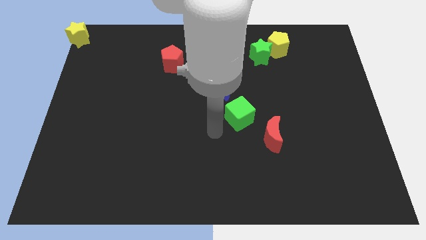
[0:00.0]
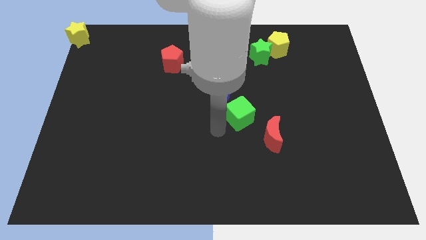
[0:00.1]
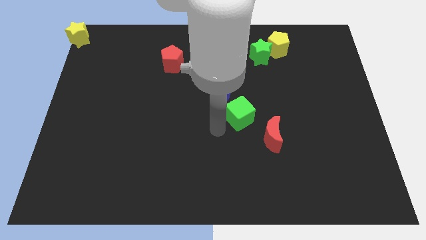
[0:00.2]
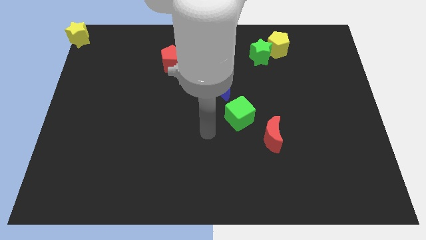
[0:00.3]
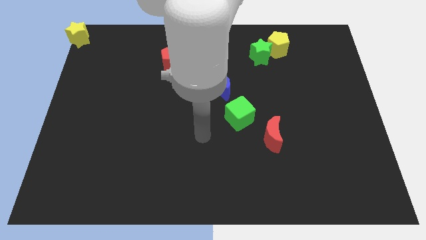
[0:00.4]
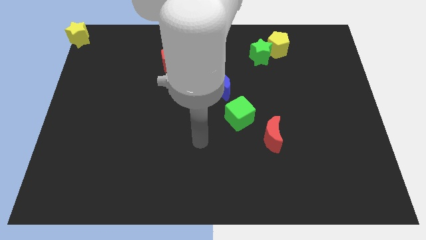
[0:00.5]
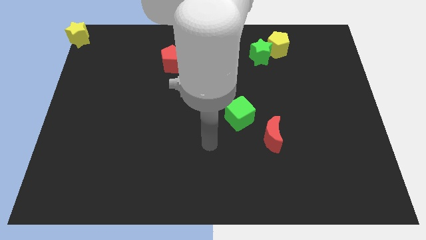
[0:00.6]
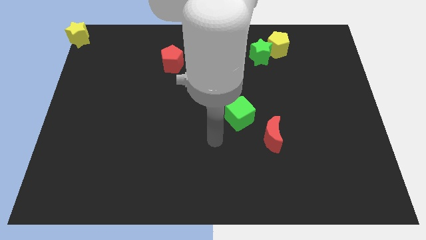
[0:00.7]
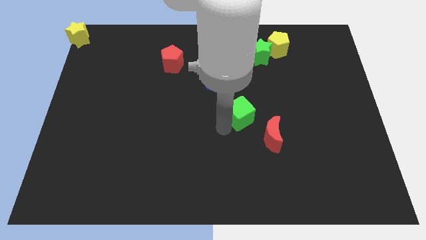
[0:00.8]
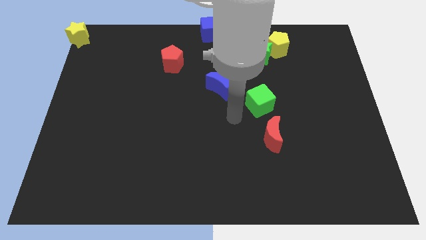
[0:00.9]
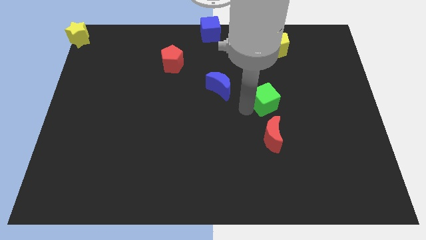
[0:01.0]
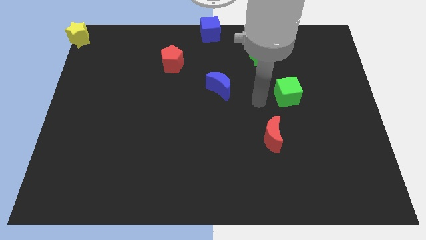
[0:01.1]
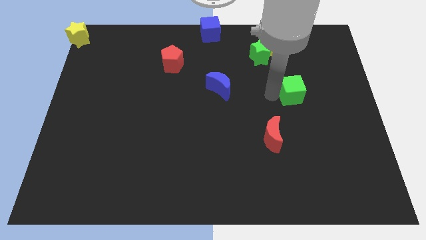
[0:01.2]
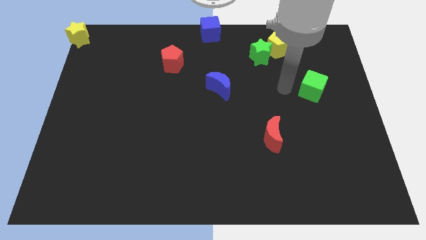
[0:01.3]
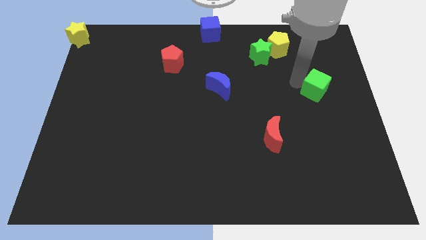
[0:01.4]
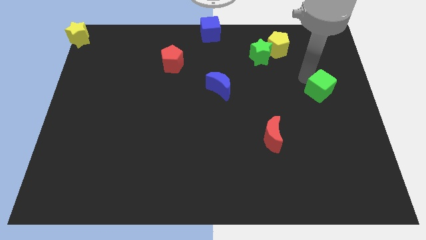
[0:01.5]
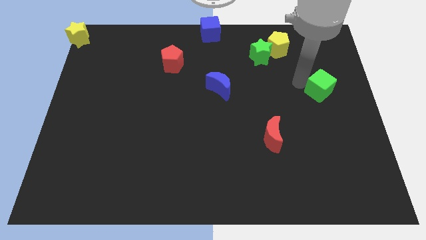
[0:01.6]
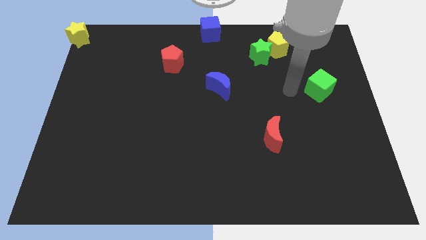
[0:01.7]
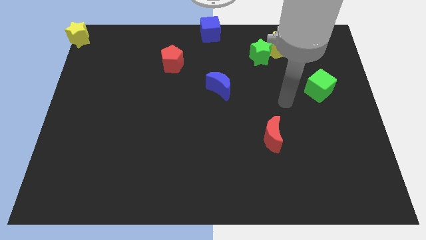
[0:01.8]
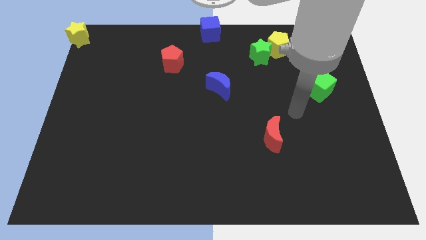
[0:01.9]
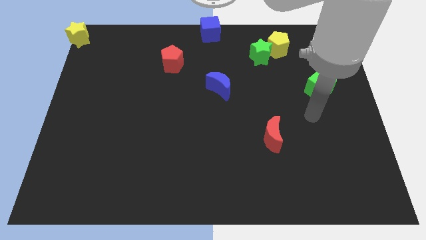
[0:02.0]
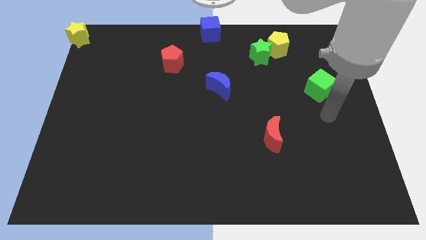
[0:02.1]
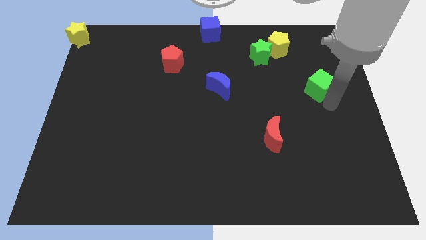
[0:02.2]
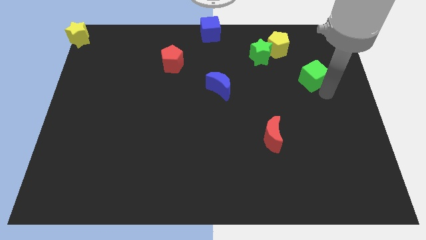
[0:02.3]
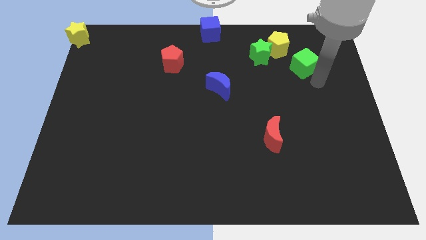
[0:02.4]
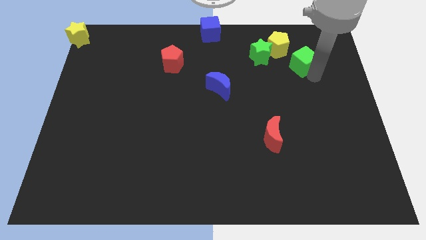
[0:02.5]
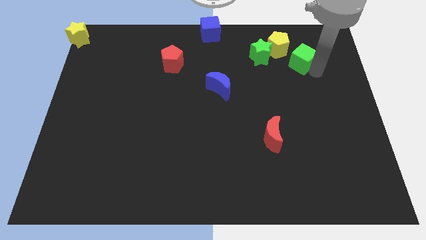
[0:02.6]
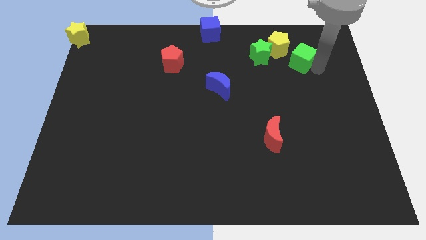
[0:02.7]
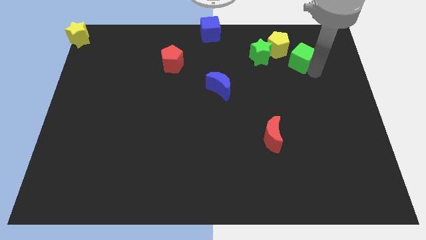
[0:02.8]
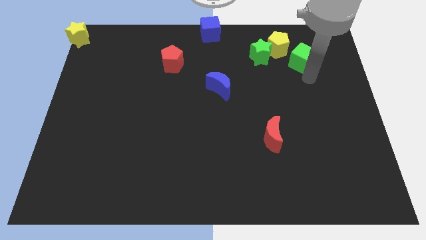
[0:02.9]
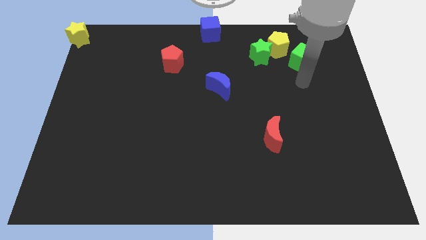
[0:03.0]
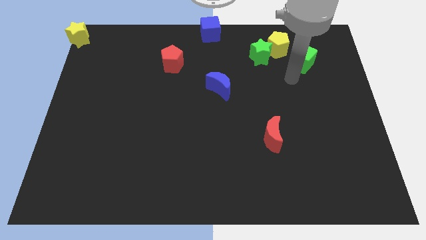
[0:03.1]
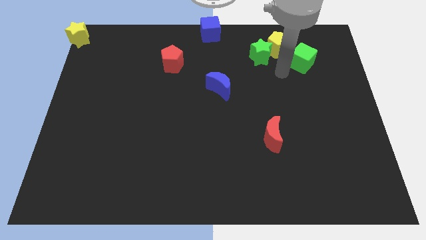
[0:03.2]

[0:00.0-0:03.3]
move the green cube diagonal below the yellow pentagon

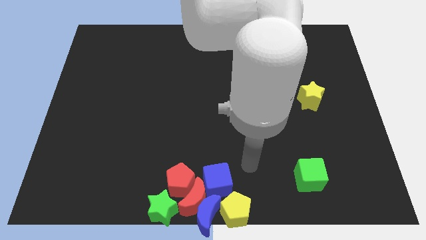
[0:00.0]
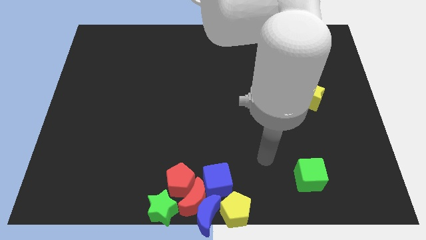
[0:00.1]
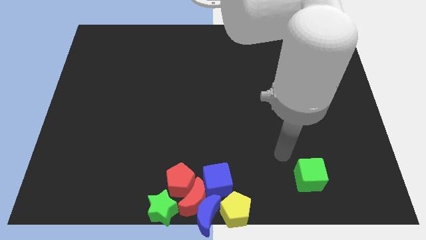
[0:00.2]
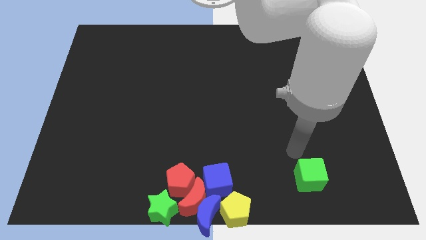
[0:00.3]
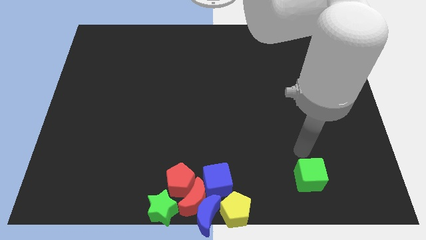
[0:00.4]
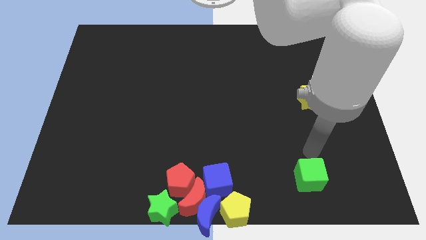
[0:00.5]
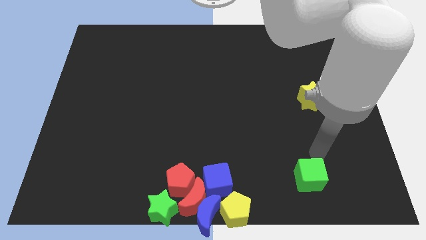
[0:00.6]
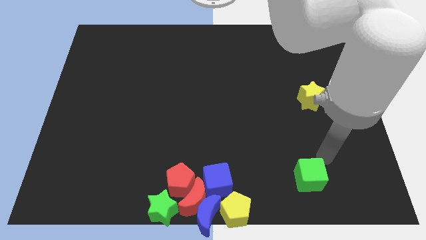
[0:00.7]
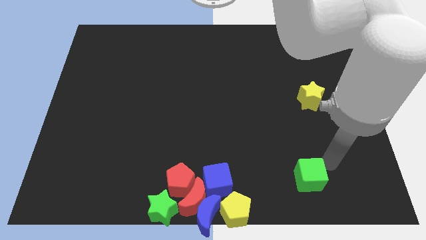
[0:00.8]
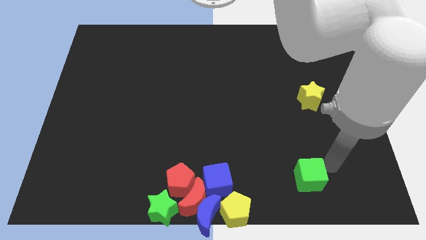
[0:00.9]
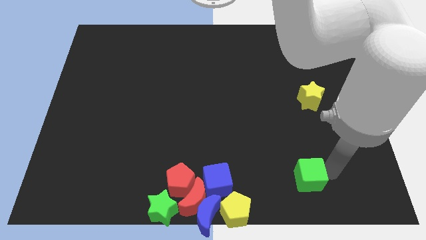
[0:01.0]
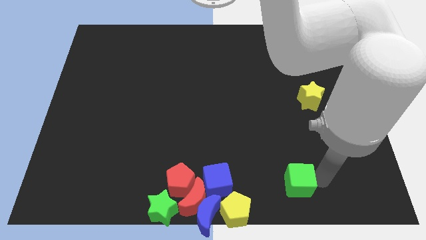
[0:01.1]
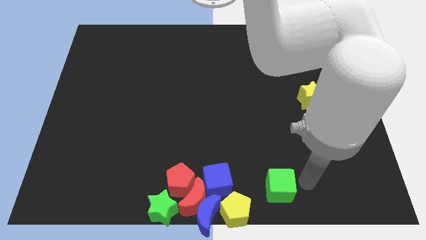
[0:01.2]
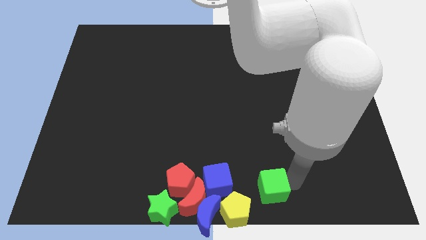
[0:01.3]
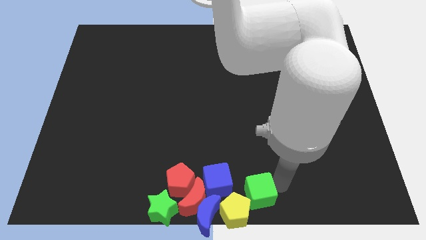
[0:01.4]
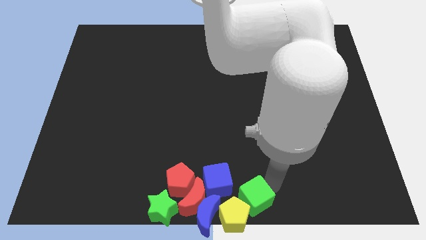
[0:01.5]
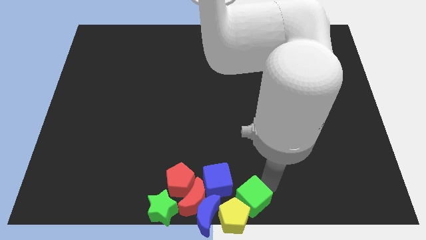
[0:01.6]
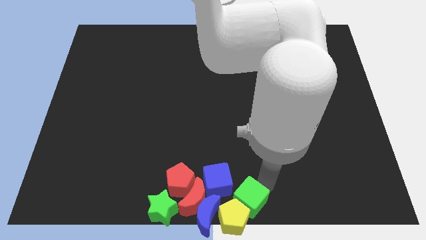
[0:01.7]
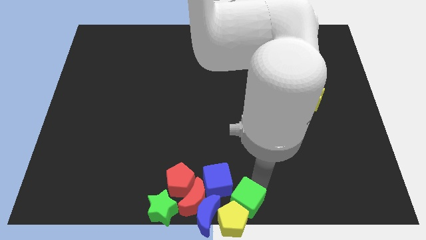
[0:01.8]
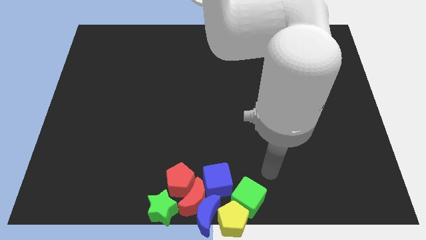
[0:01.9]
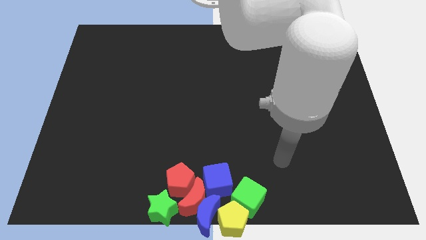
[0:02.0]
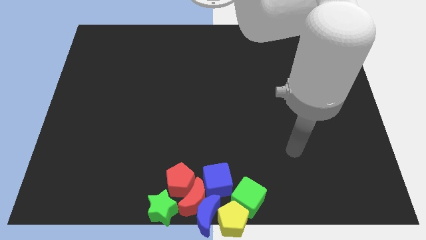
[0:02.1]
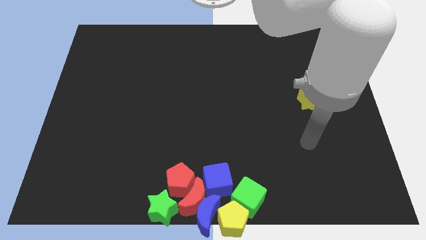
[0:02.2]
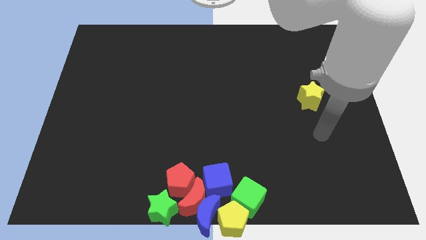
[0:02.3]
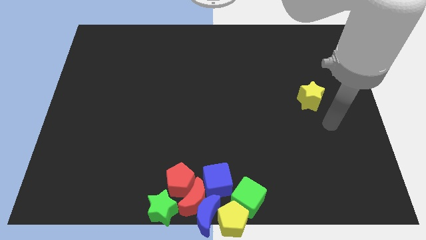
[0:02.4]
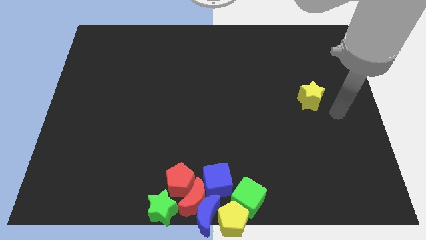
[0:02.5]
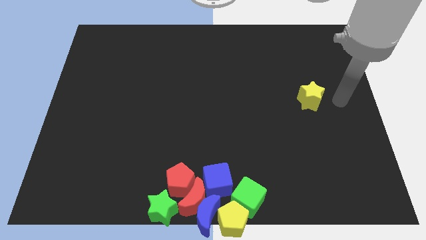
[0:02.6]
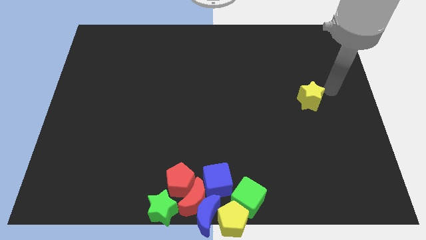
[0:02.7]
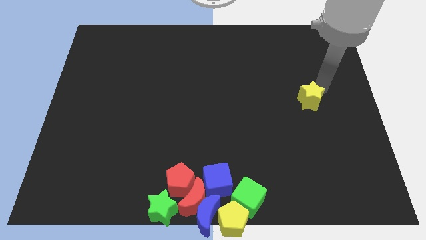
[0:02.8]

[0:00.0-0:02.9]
move the green cube above the yellow pentagon

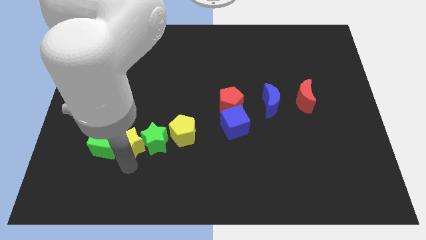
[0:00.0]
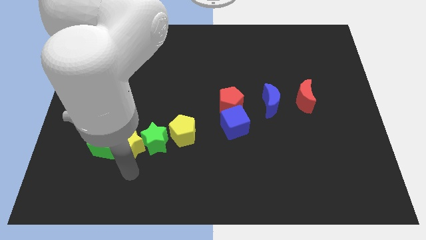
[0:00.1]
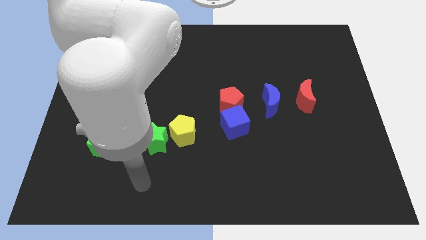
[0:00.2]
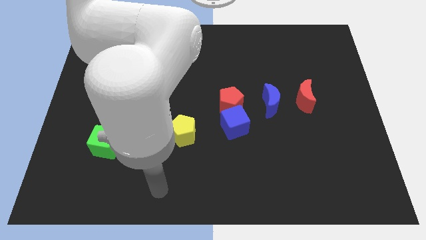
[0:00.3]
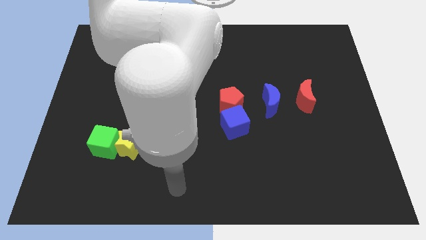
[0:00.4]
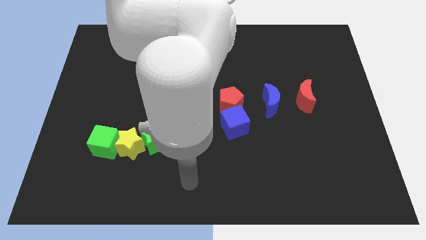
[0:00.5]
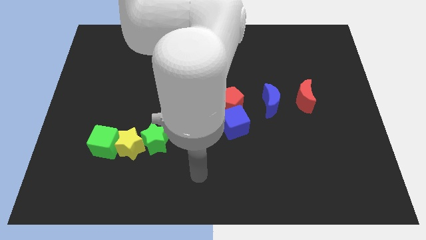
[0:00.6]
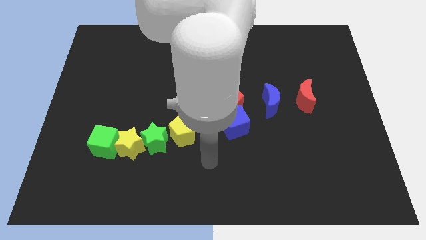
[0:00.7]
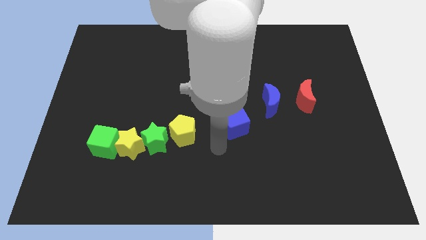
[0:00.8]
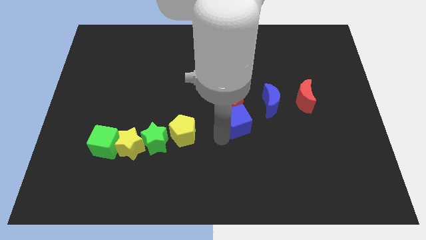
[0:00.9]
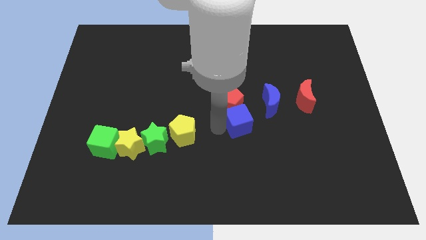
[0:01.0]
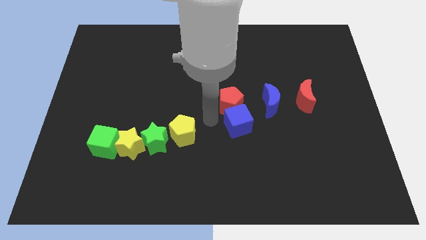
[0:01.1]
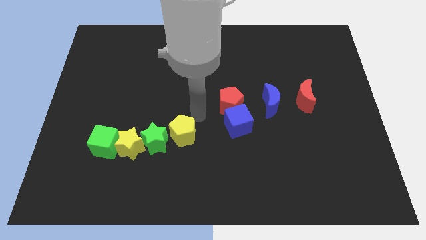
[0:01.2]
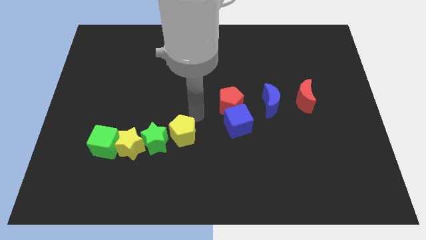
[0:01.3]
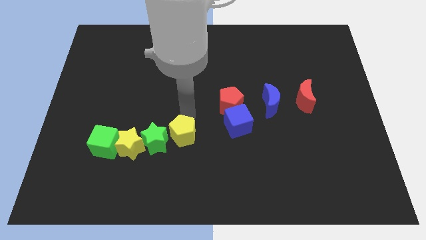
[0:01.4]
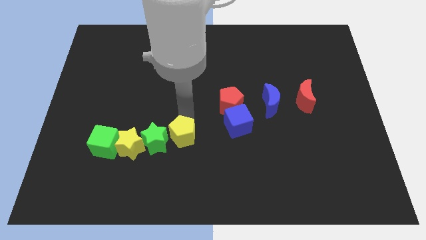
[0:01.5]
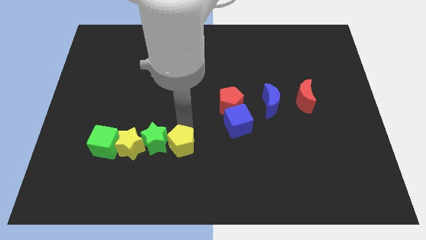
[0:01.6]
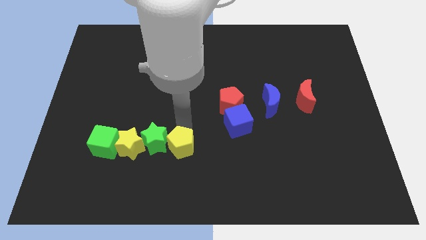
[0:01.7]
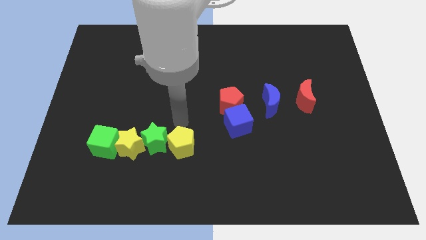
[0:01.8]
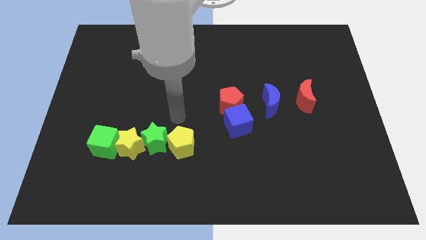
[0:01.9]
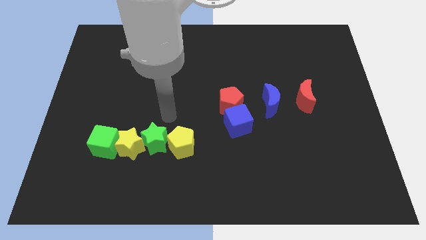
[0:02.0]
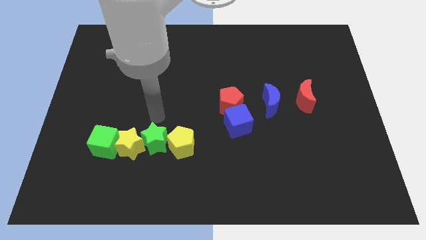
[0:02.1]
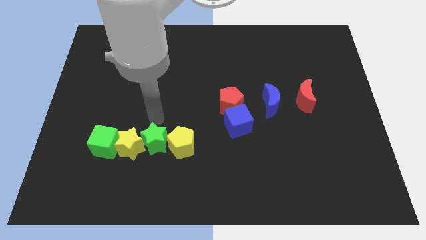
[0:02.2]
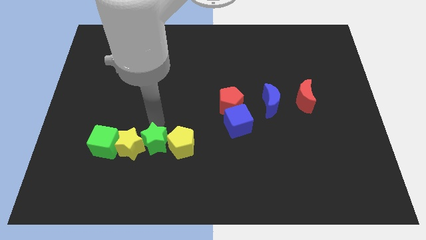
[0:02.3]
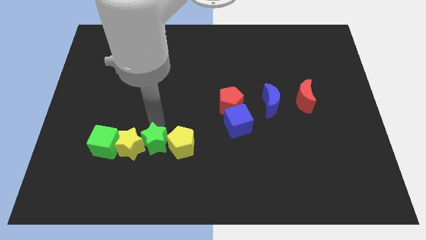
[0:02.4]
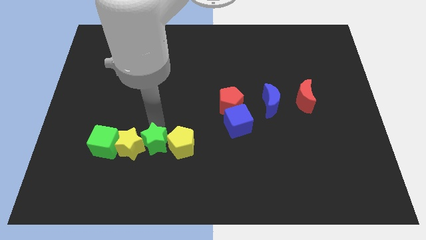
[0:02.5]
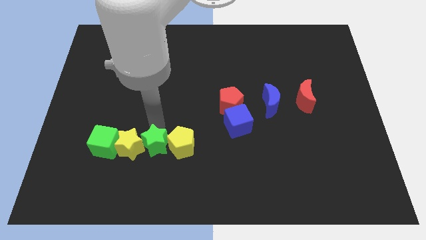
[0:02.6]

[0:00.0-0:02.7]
place yellow pentagon on right of green star

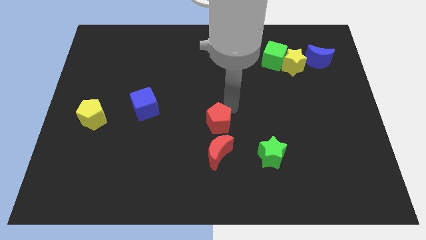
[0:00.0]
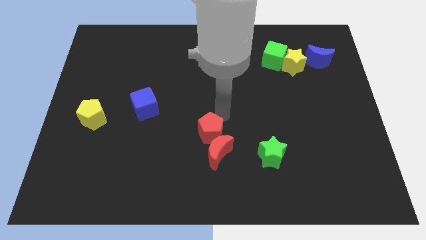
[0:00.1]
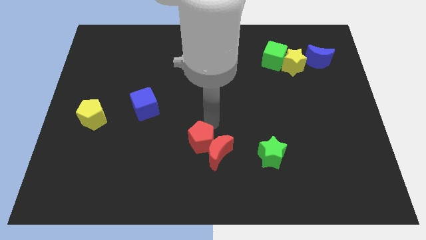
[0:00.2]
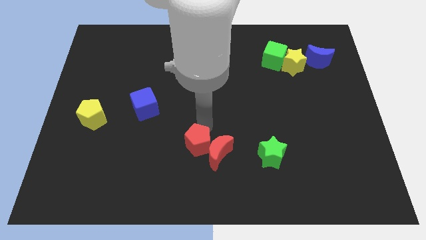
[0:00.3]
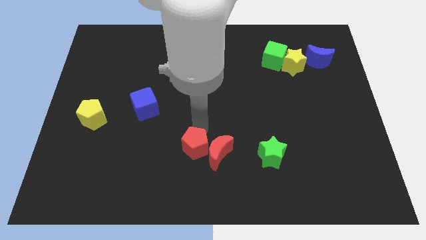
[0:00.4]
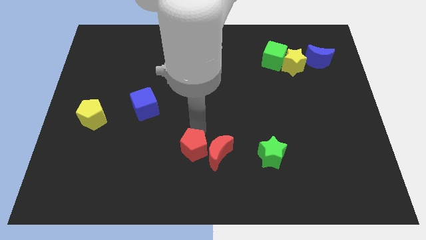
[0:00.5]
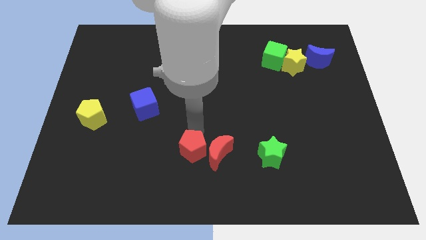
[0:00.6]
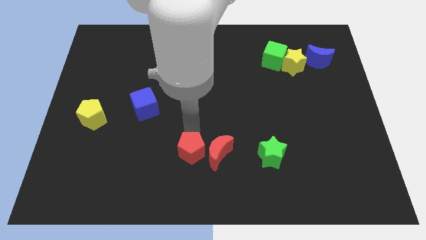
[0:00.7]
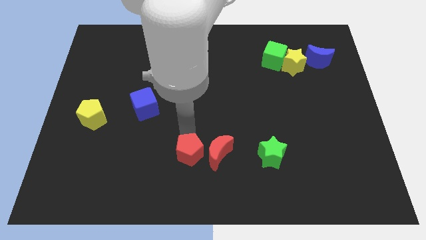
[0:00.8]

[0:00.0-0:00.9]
put red pentagon adjacent to red crescent
